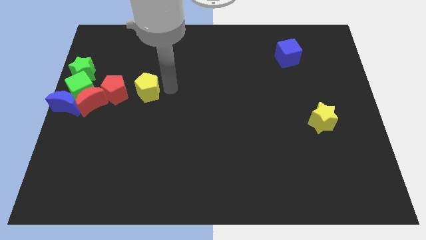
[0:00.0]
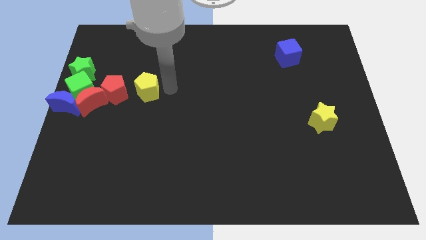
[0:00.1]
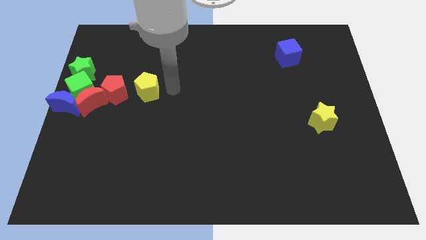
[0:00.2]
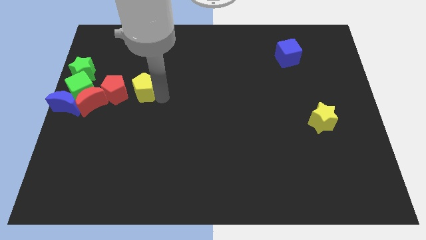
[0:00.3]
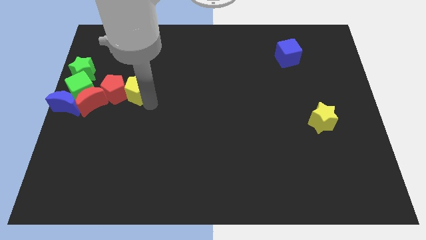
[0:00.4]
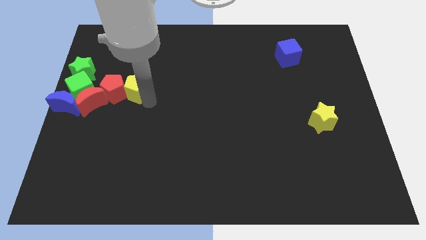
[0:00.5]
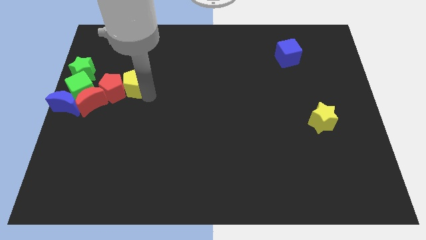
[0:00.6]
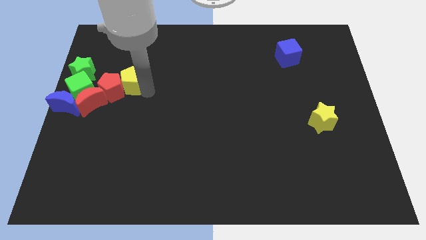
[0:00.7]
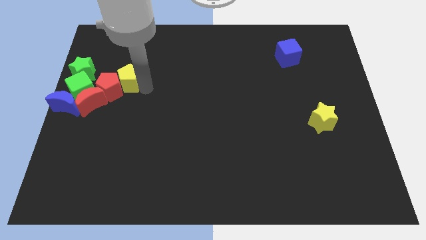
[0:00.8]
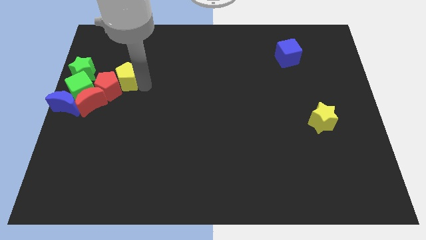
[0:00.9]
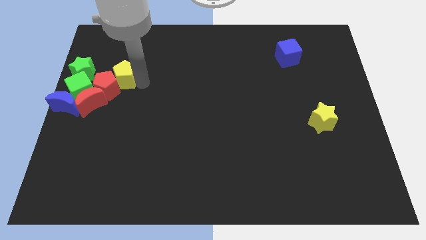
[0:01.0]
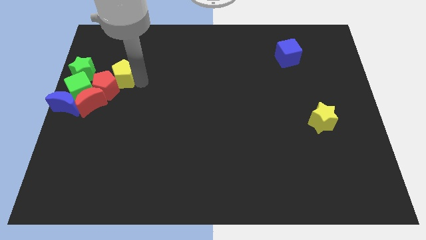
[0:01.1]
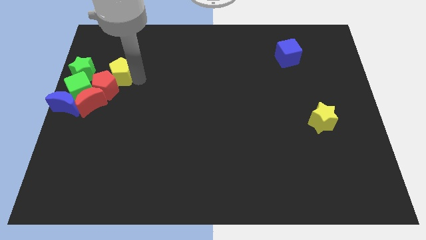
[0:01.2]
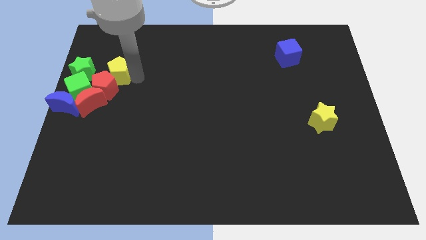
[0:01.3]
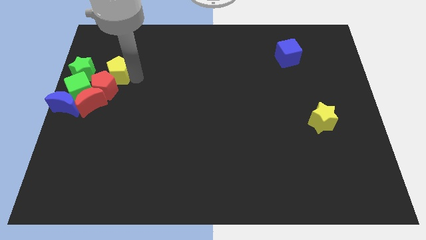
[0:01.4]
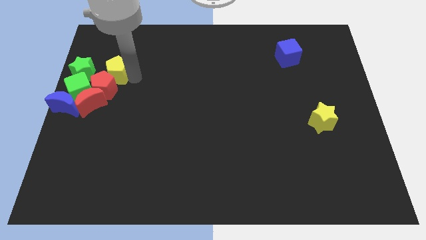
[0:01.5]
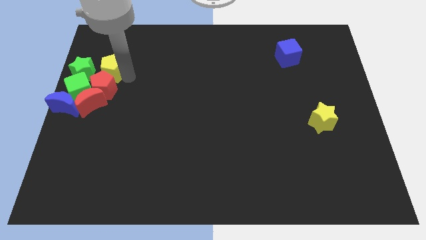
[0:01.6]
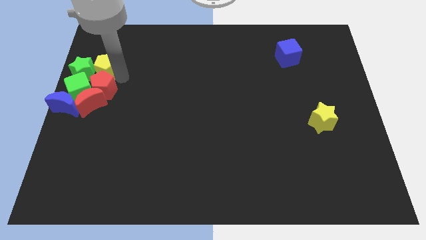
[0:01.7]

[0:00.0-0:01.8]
place the yellow pentagon on top of the red pentagon

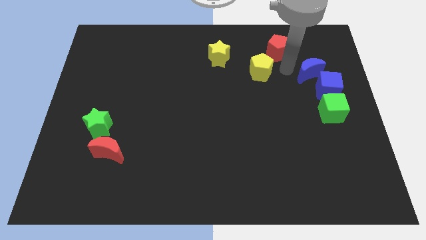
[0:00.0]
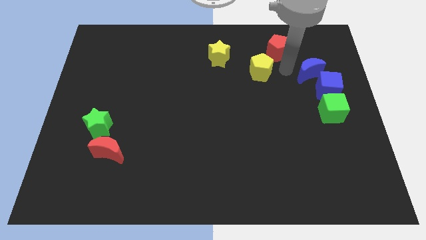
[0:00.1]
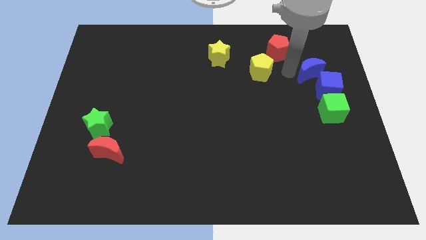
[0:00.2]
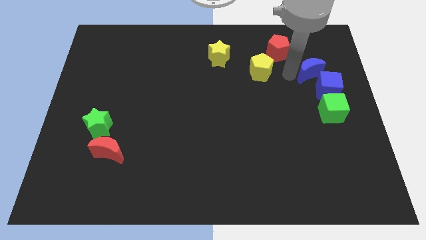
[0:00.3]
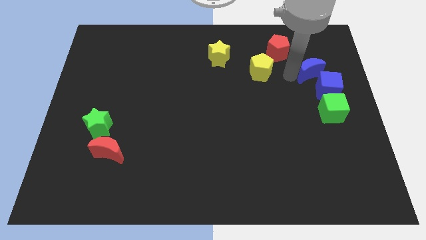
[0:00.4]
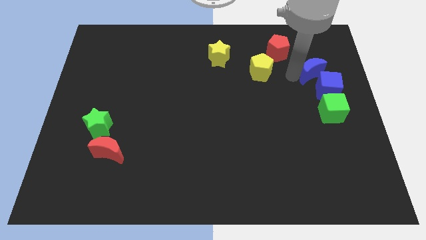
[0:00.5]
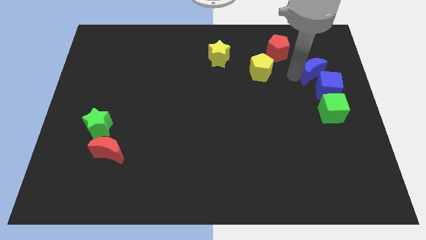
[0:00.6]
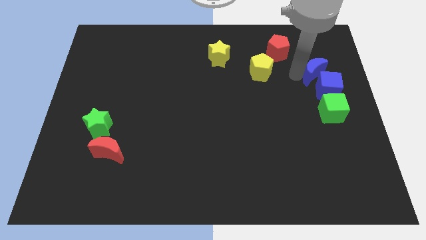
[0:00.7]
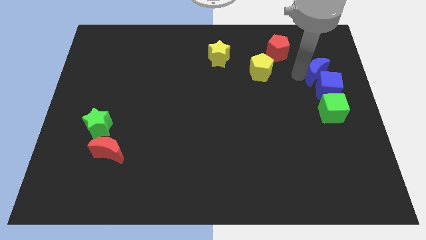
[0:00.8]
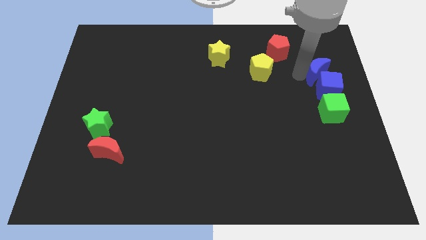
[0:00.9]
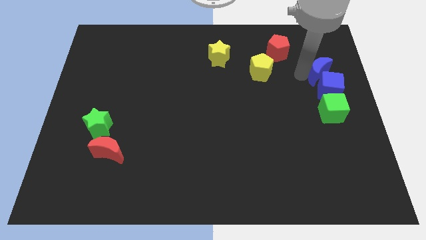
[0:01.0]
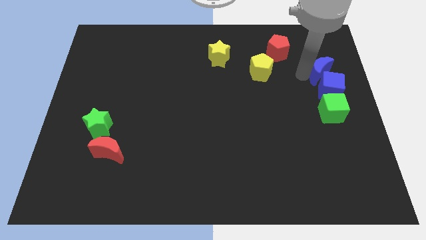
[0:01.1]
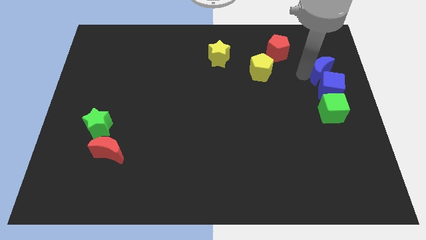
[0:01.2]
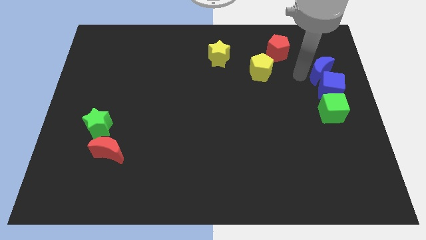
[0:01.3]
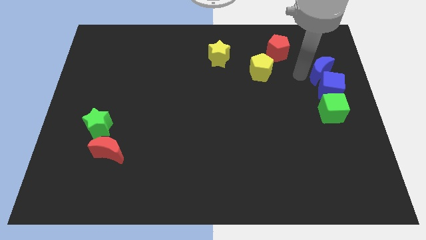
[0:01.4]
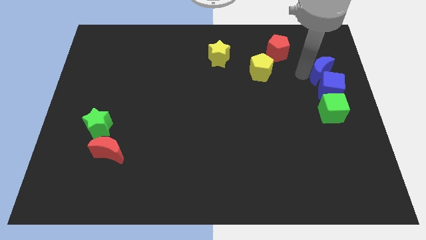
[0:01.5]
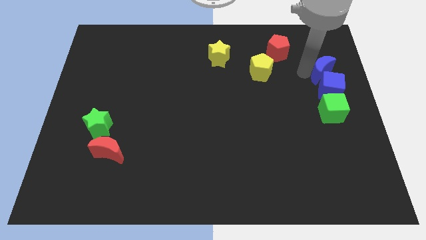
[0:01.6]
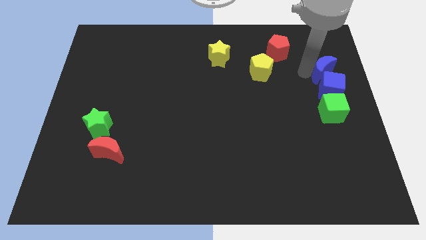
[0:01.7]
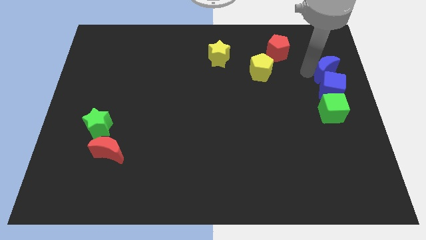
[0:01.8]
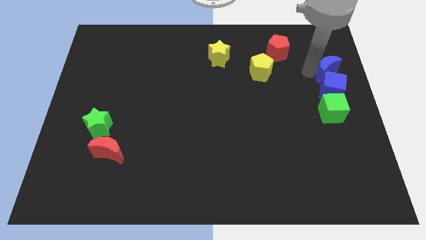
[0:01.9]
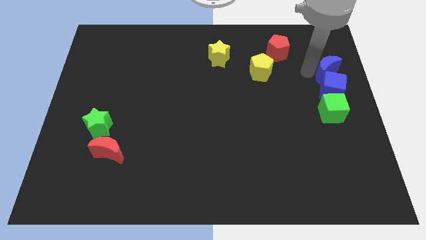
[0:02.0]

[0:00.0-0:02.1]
push the blue moon into blue cube

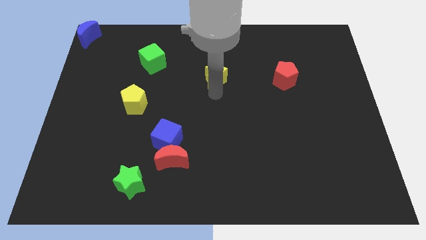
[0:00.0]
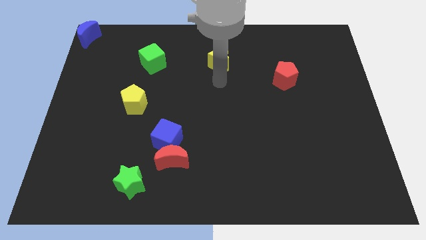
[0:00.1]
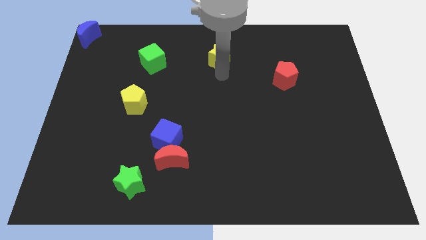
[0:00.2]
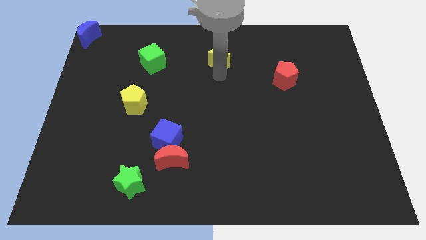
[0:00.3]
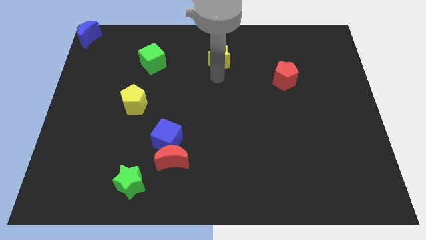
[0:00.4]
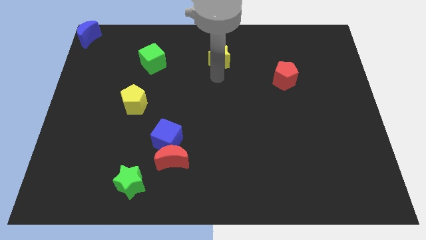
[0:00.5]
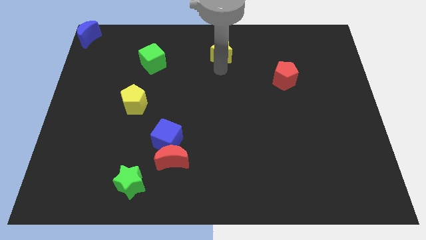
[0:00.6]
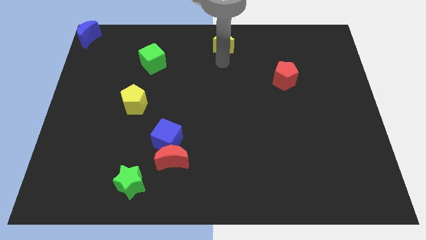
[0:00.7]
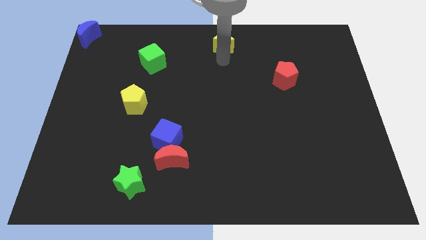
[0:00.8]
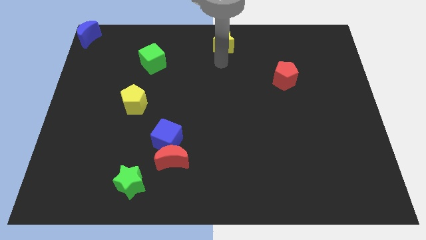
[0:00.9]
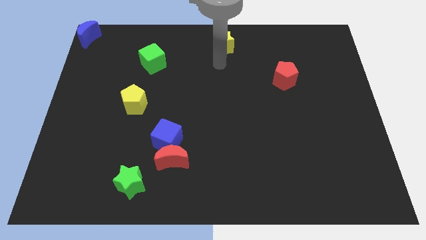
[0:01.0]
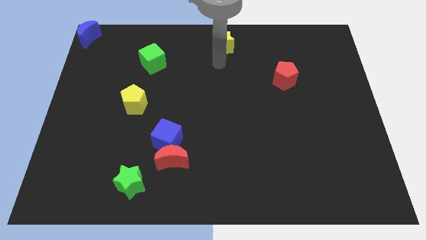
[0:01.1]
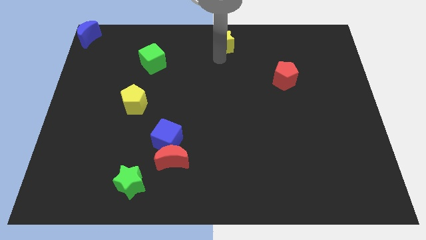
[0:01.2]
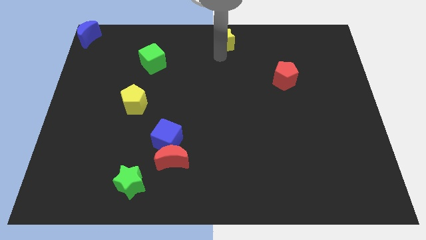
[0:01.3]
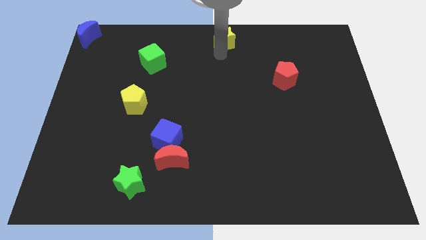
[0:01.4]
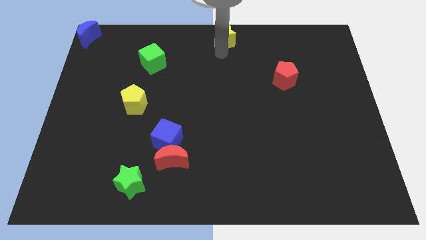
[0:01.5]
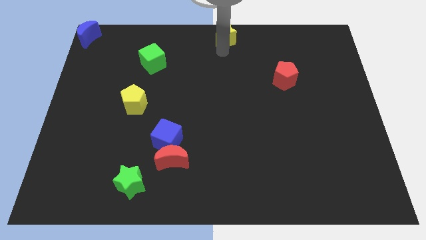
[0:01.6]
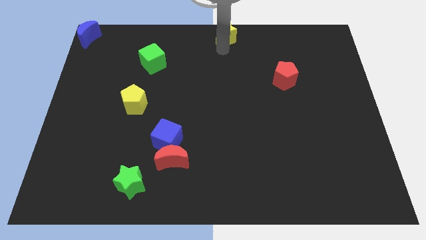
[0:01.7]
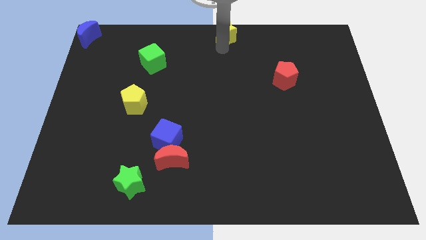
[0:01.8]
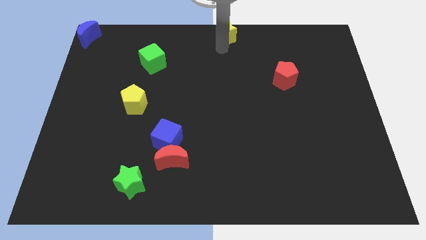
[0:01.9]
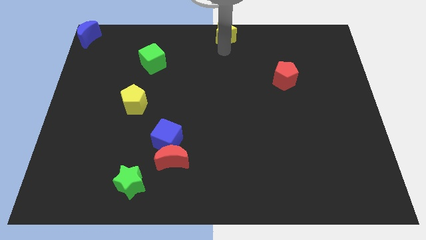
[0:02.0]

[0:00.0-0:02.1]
place the yellow star to the top center of the board

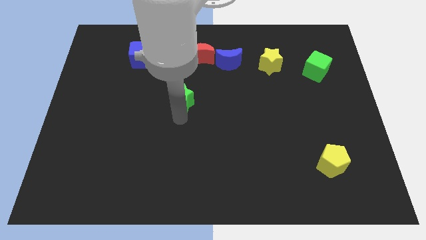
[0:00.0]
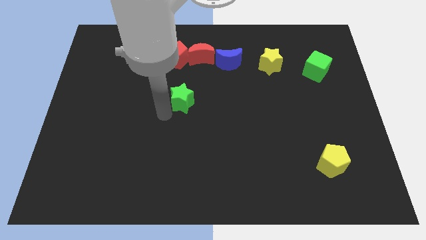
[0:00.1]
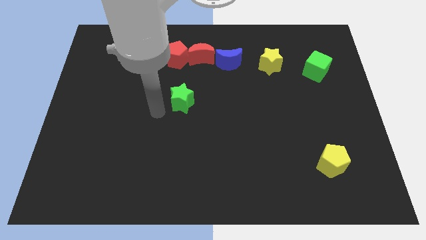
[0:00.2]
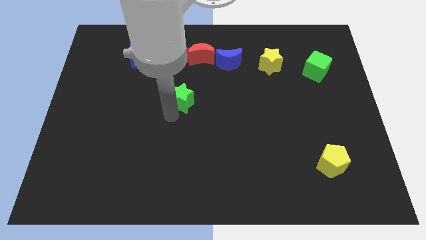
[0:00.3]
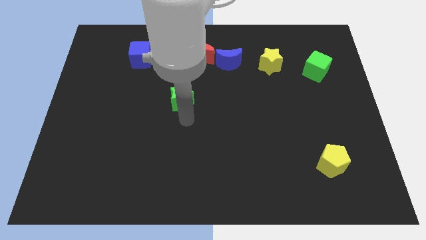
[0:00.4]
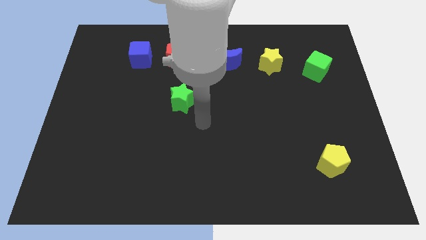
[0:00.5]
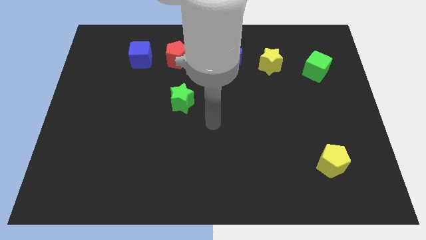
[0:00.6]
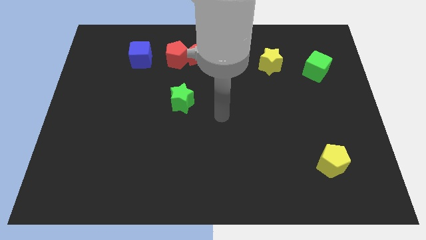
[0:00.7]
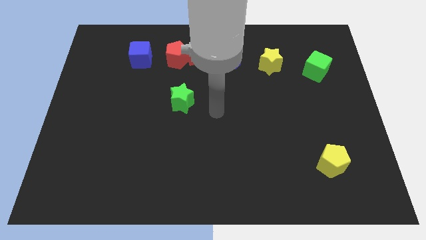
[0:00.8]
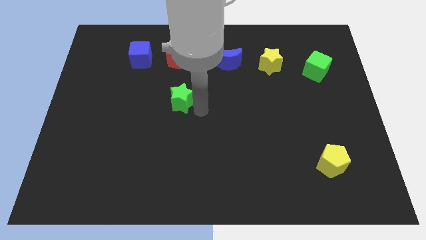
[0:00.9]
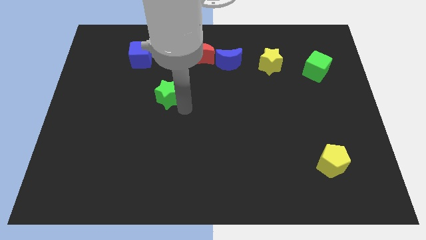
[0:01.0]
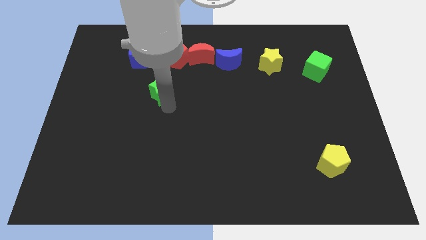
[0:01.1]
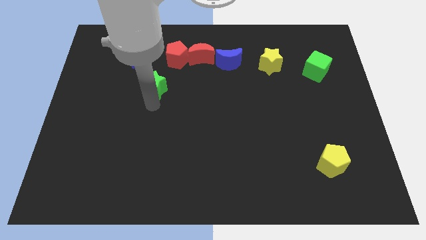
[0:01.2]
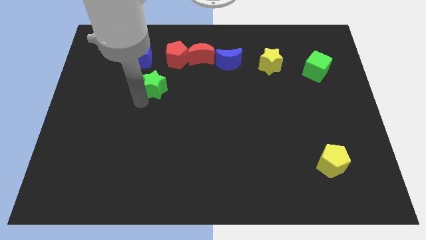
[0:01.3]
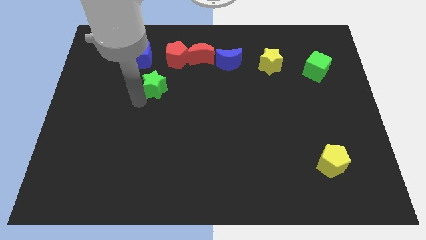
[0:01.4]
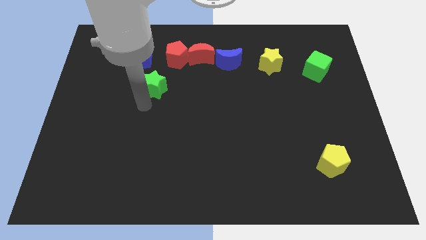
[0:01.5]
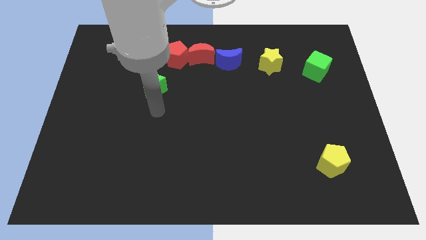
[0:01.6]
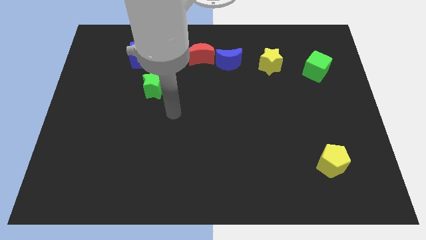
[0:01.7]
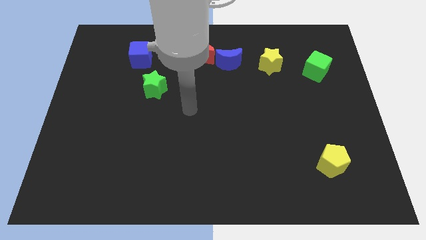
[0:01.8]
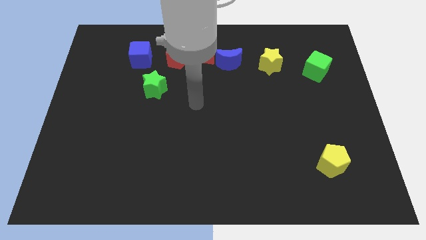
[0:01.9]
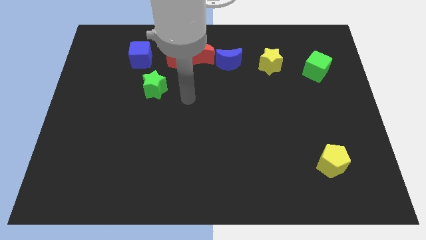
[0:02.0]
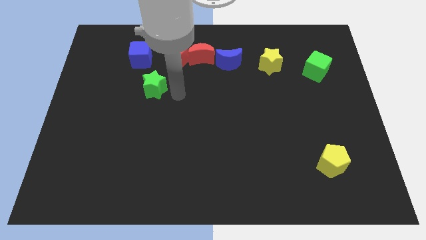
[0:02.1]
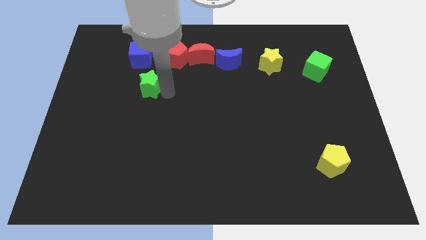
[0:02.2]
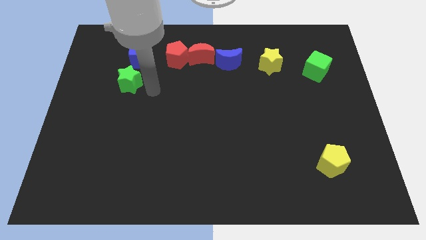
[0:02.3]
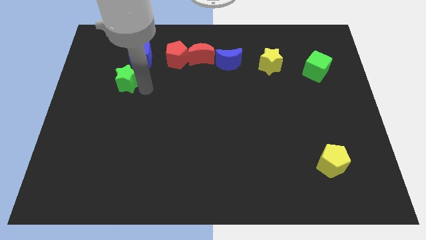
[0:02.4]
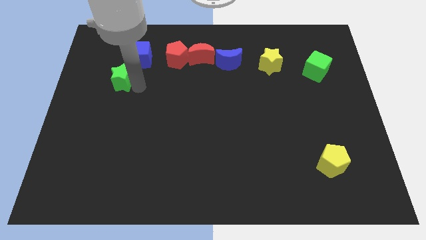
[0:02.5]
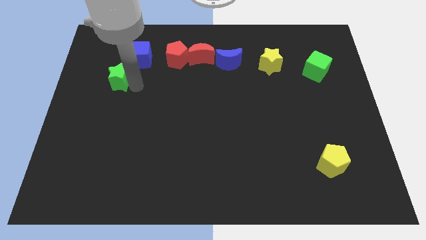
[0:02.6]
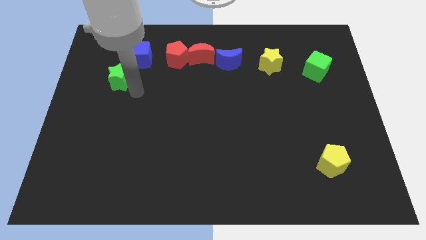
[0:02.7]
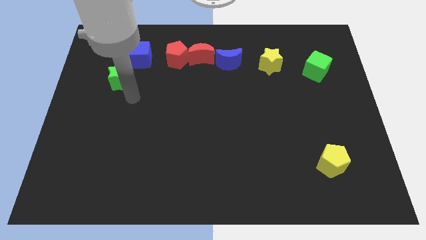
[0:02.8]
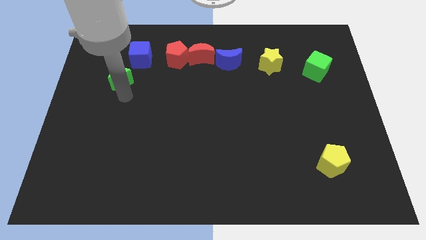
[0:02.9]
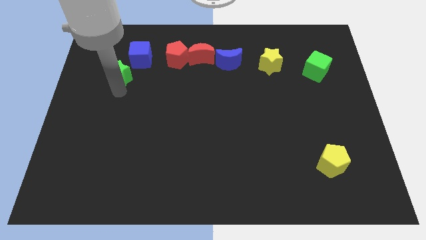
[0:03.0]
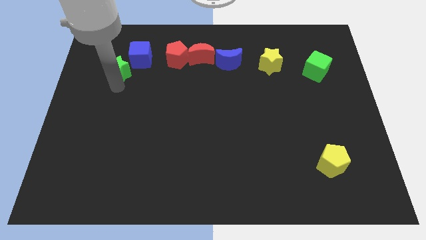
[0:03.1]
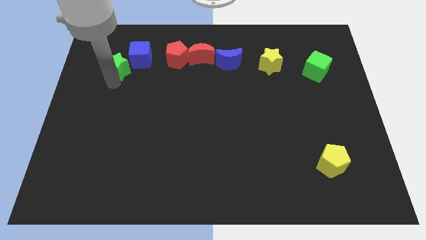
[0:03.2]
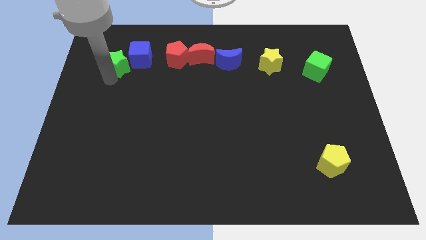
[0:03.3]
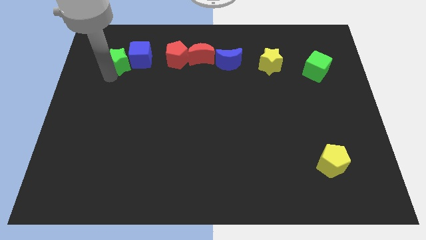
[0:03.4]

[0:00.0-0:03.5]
place green star to the bottom left of the blue cube
